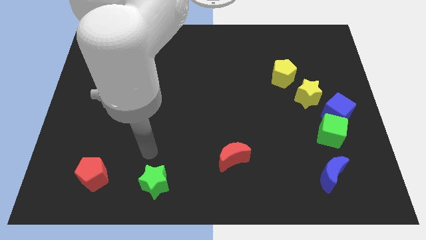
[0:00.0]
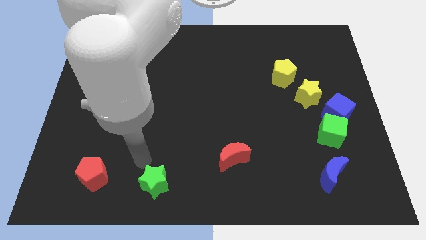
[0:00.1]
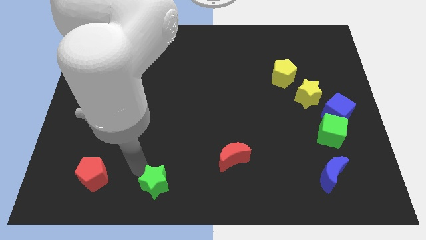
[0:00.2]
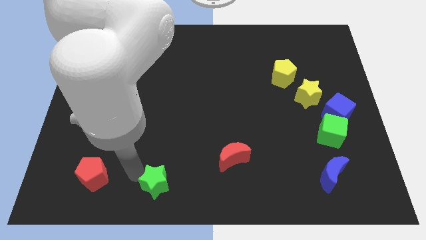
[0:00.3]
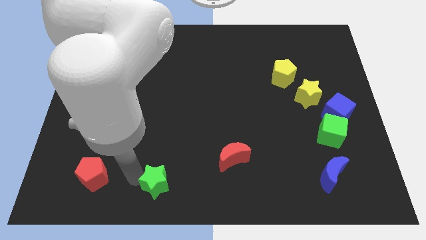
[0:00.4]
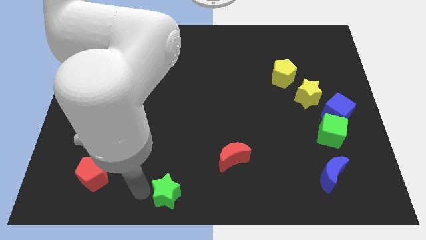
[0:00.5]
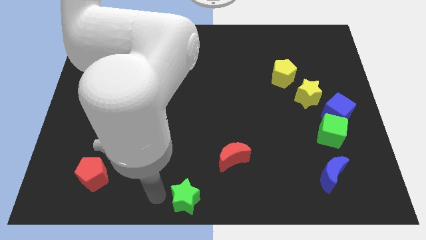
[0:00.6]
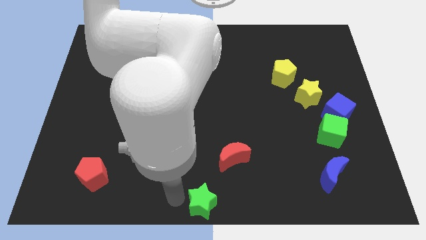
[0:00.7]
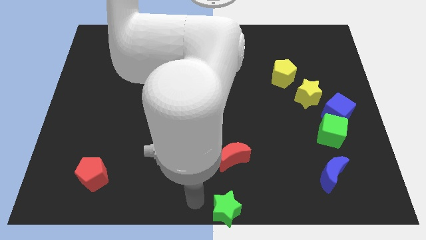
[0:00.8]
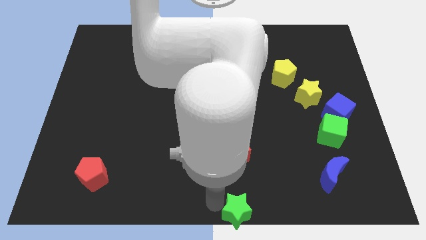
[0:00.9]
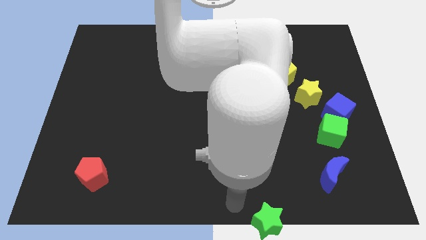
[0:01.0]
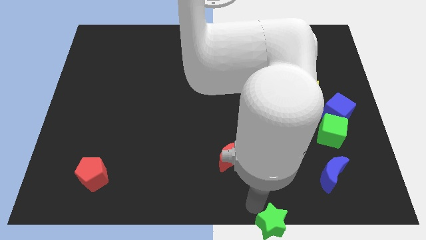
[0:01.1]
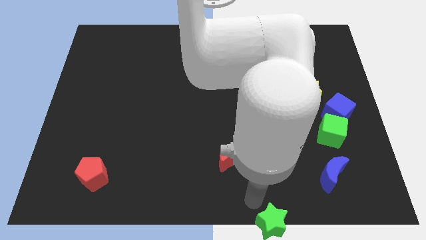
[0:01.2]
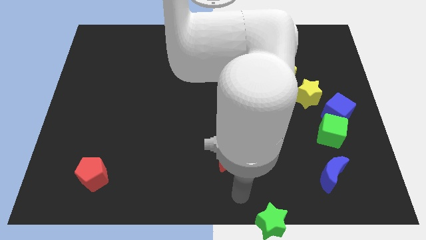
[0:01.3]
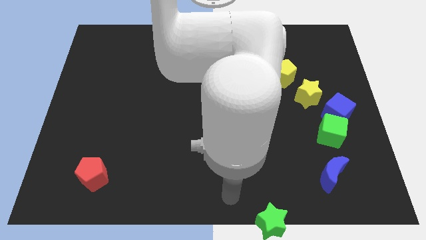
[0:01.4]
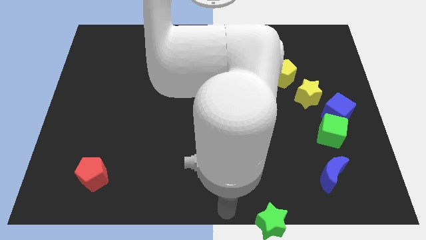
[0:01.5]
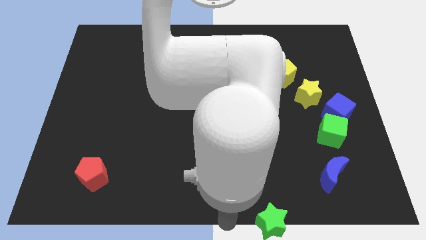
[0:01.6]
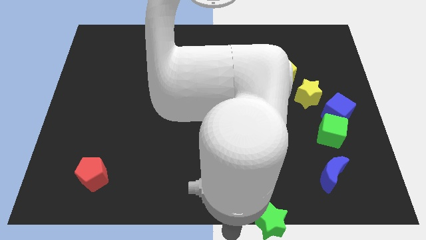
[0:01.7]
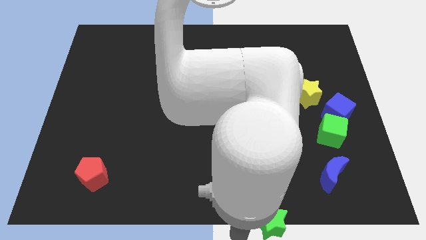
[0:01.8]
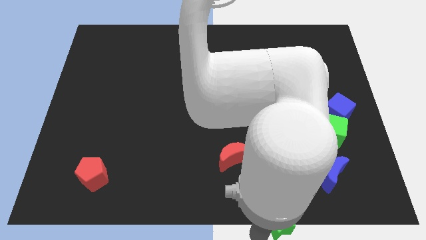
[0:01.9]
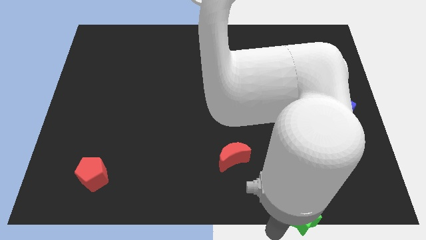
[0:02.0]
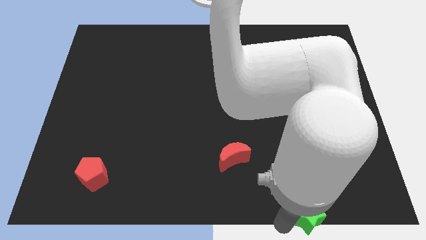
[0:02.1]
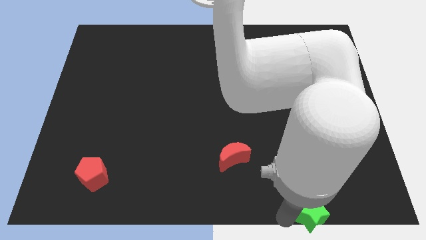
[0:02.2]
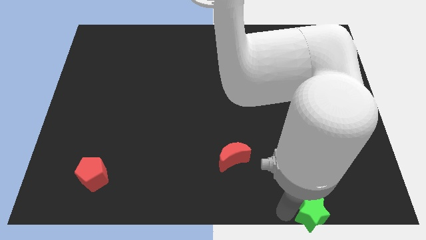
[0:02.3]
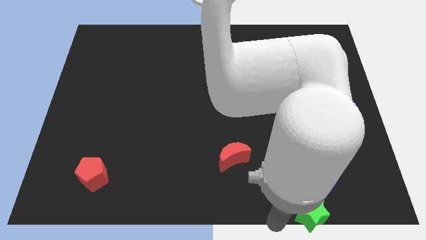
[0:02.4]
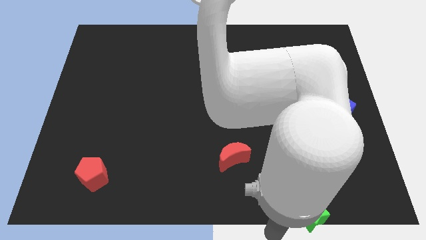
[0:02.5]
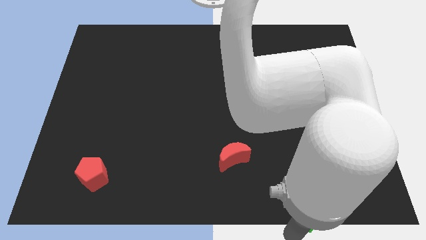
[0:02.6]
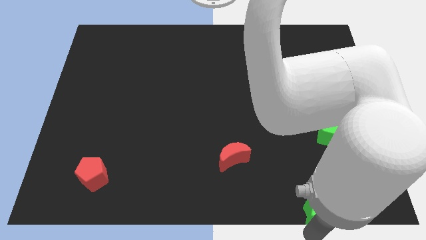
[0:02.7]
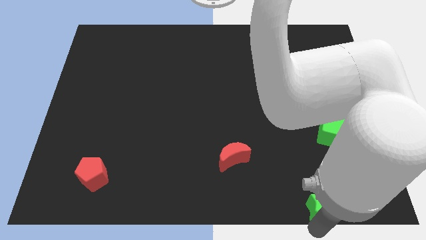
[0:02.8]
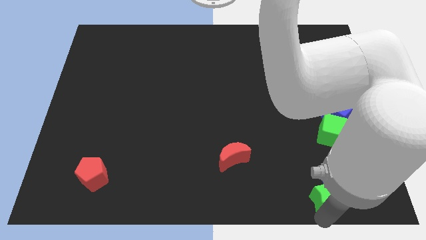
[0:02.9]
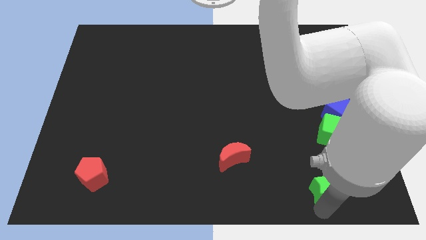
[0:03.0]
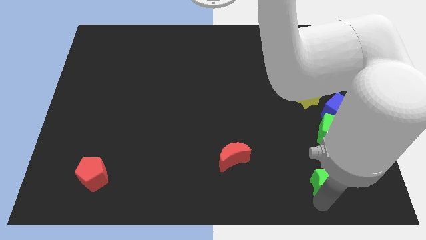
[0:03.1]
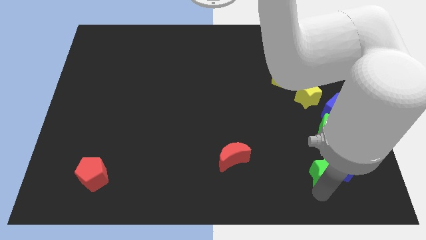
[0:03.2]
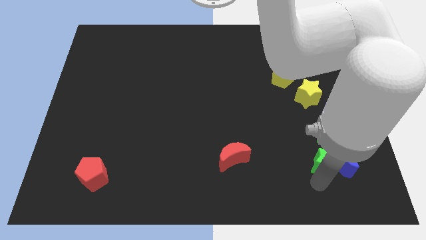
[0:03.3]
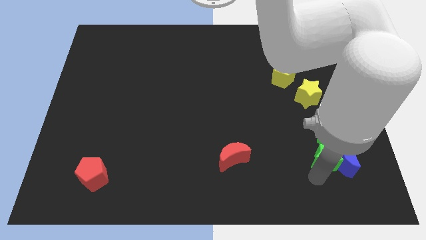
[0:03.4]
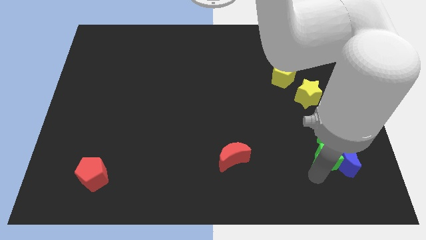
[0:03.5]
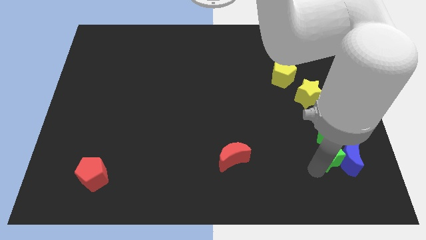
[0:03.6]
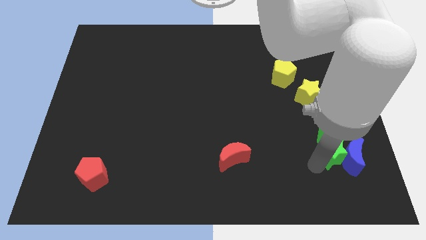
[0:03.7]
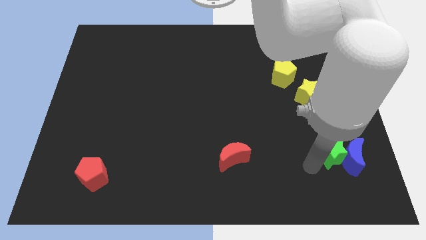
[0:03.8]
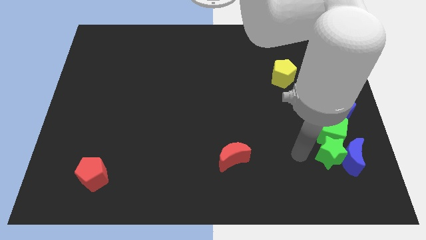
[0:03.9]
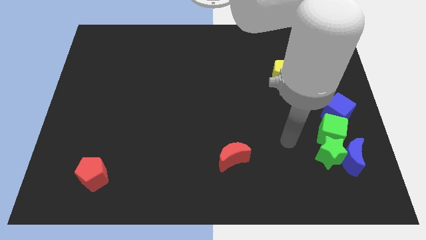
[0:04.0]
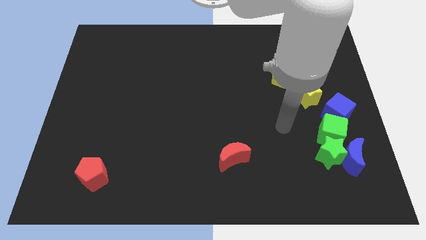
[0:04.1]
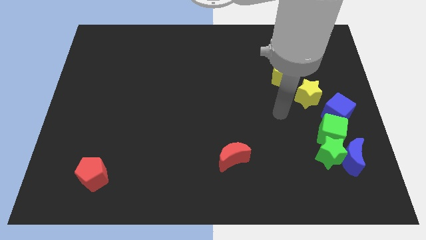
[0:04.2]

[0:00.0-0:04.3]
move the green star to the bottom side of the green cube

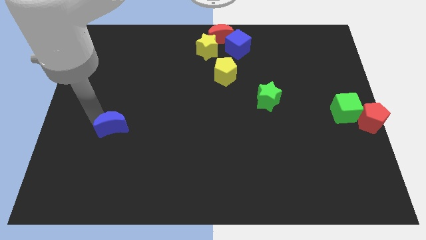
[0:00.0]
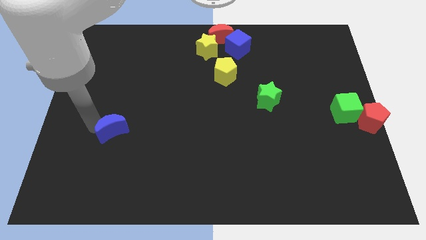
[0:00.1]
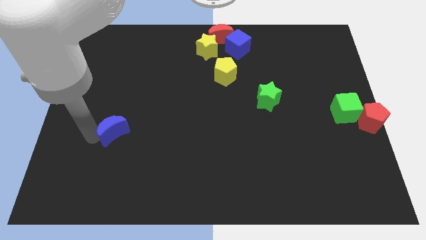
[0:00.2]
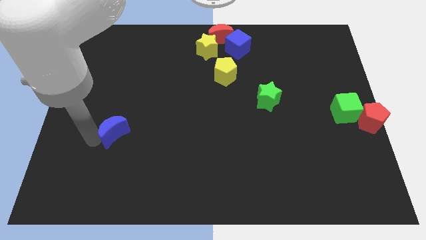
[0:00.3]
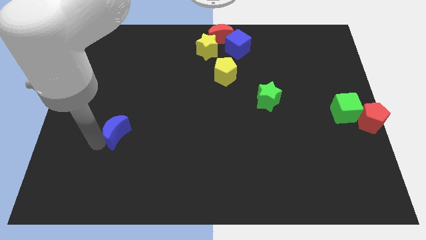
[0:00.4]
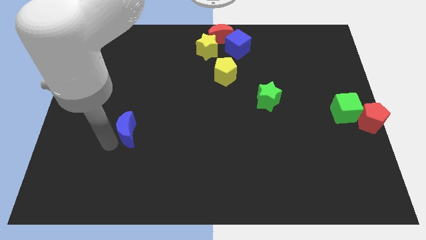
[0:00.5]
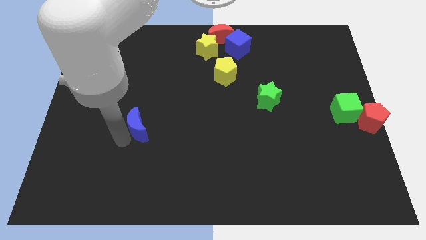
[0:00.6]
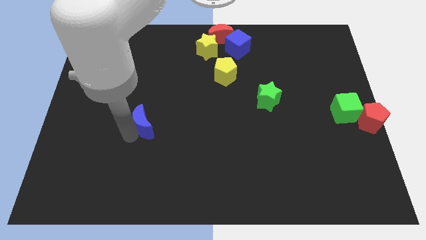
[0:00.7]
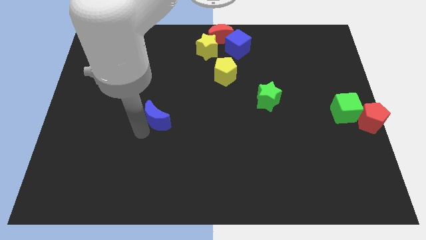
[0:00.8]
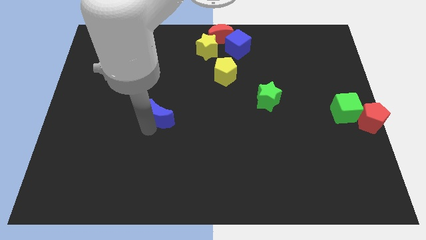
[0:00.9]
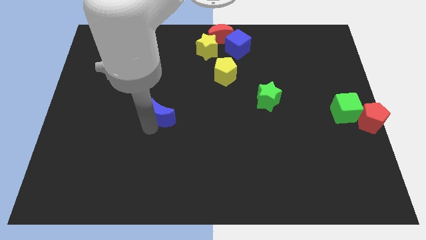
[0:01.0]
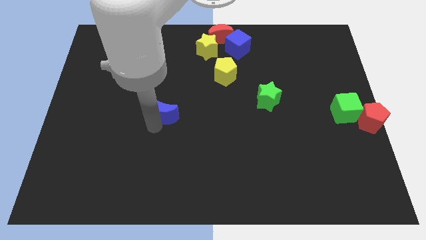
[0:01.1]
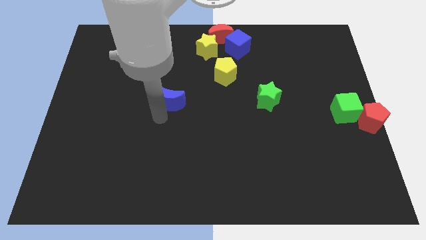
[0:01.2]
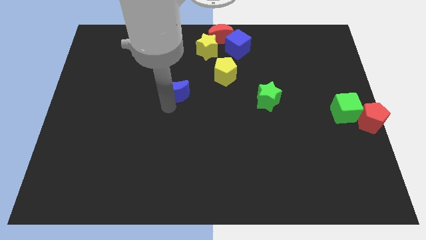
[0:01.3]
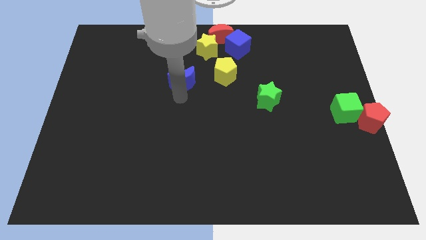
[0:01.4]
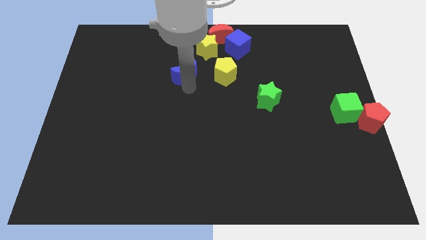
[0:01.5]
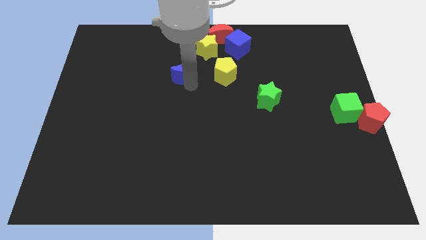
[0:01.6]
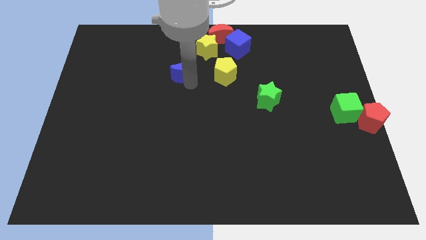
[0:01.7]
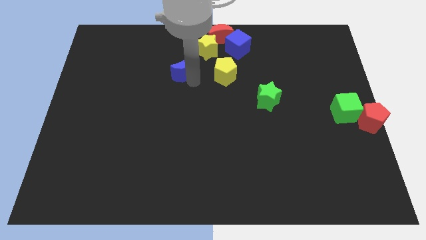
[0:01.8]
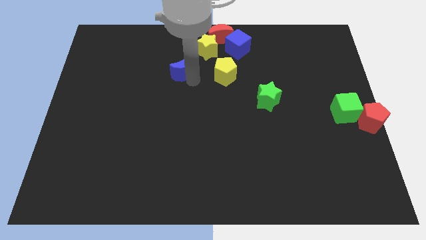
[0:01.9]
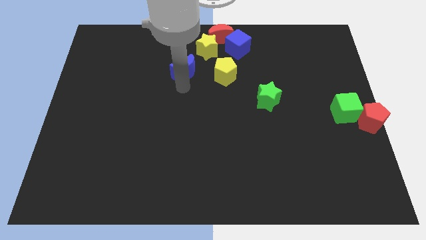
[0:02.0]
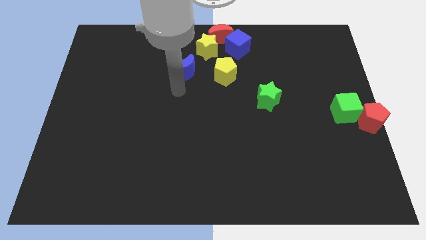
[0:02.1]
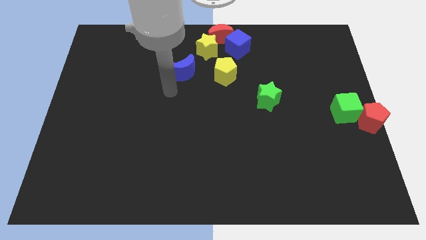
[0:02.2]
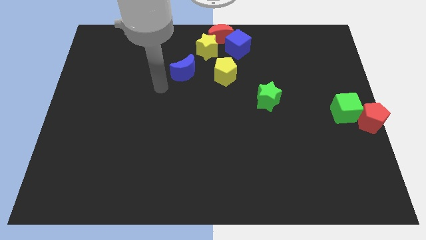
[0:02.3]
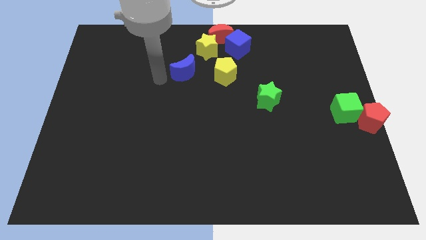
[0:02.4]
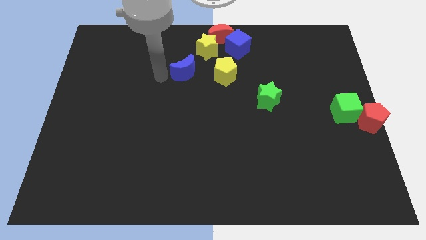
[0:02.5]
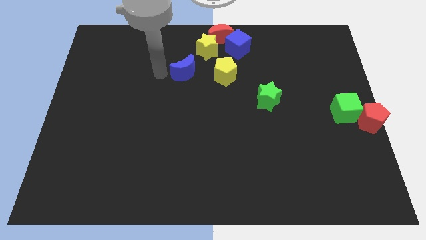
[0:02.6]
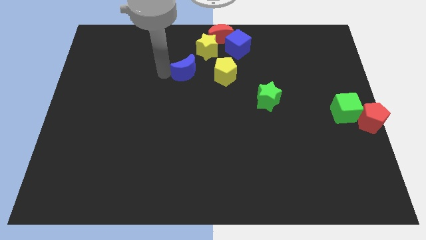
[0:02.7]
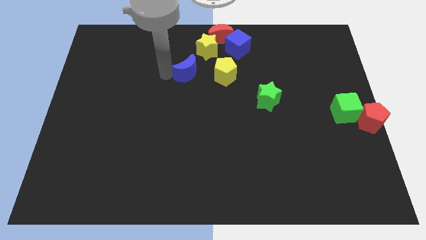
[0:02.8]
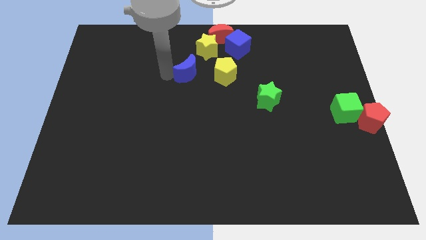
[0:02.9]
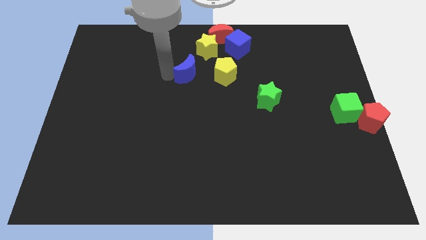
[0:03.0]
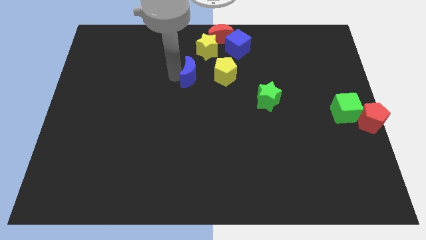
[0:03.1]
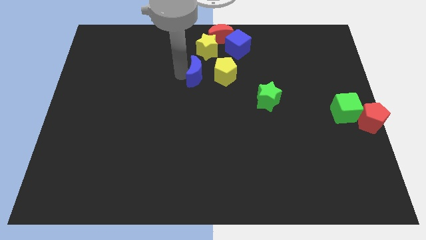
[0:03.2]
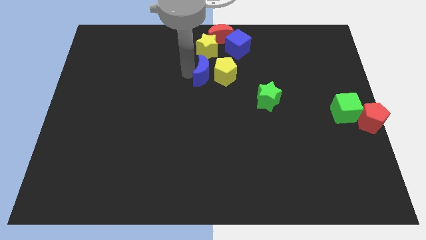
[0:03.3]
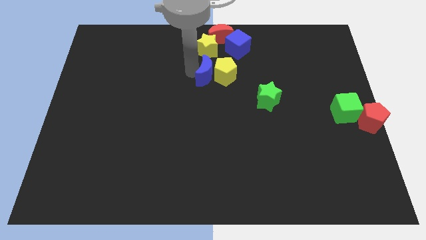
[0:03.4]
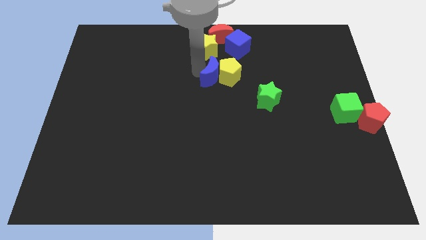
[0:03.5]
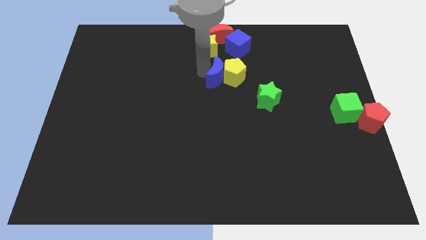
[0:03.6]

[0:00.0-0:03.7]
move the blue crescent left to the yellow pentagon

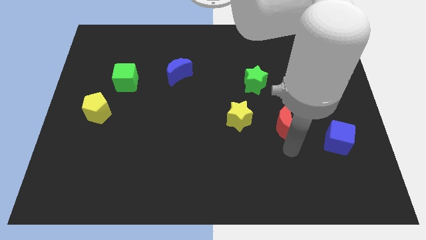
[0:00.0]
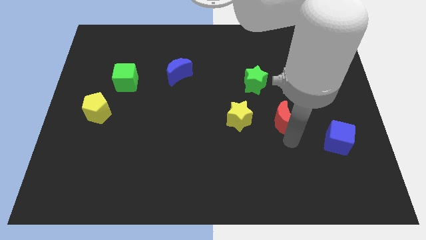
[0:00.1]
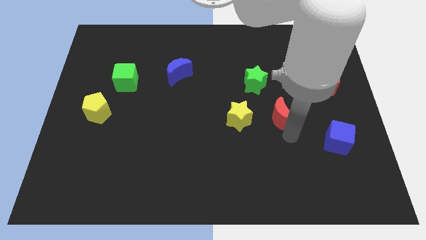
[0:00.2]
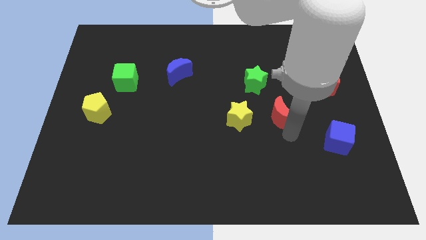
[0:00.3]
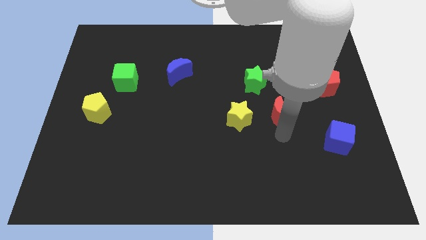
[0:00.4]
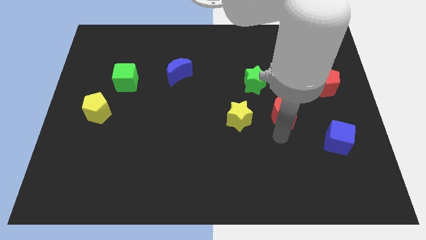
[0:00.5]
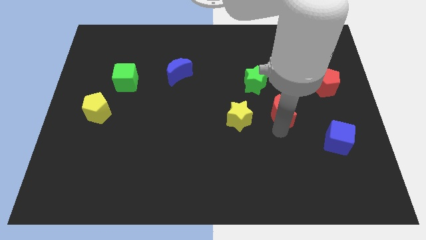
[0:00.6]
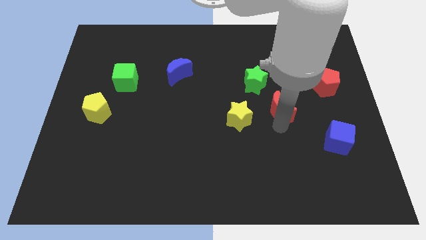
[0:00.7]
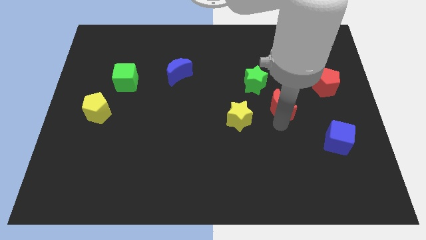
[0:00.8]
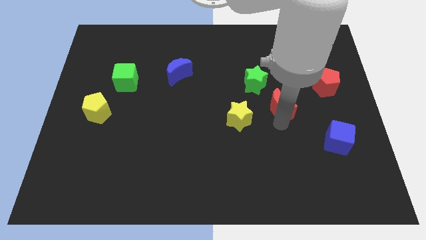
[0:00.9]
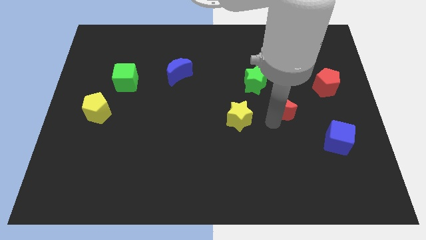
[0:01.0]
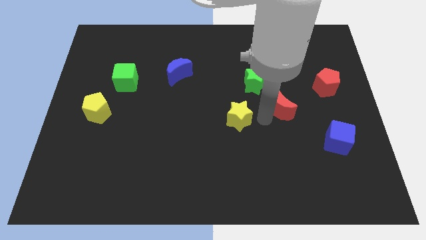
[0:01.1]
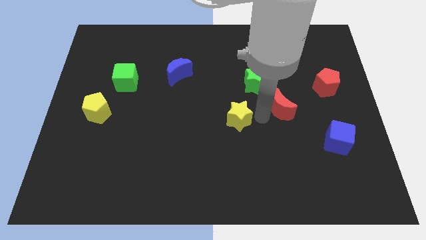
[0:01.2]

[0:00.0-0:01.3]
move the red moon upwards slightly
